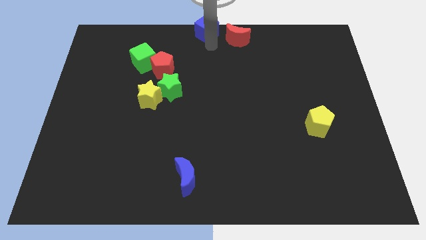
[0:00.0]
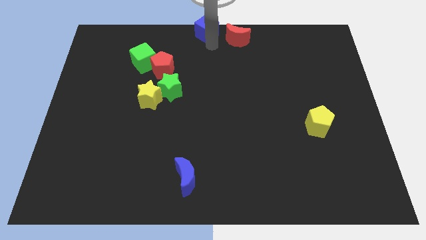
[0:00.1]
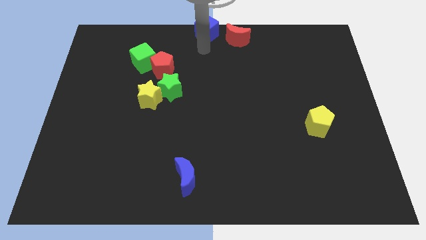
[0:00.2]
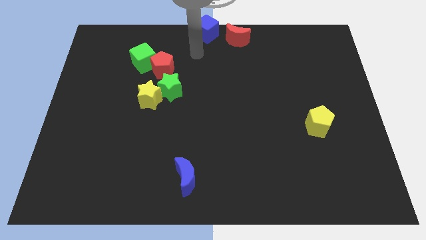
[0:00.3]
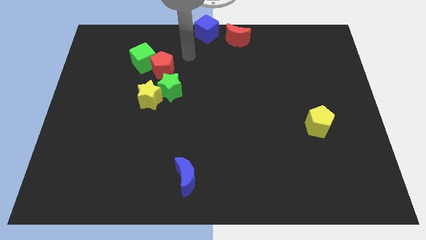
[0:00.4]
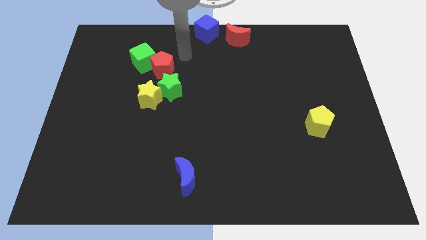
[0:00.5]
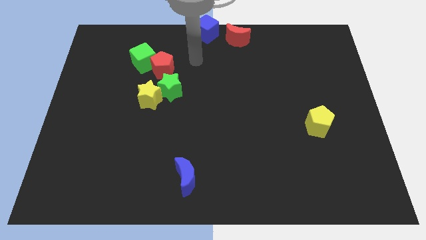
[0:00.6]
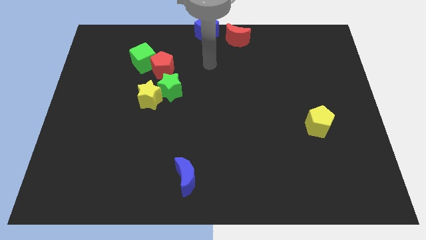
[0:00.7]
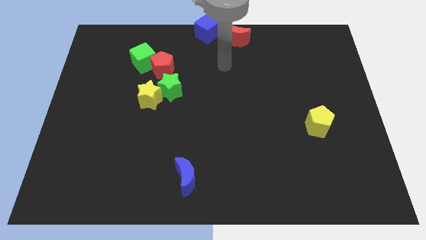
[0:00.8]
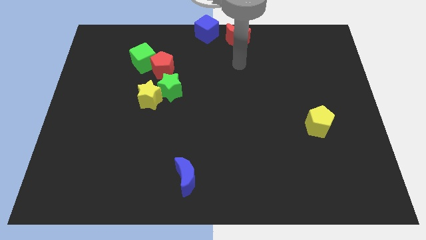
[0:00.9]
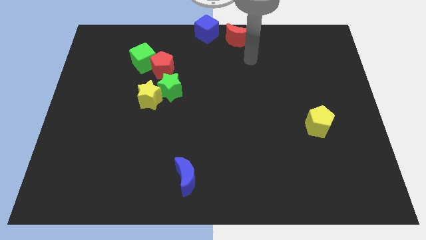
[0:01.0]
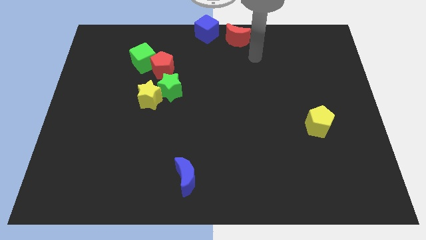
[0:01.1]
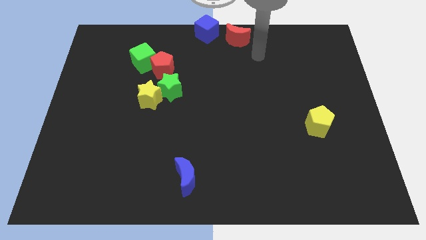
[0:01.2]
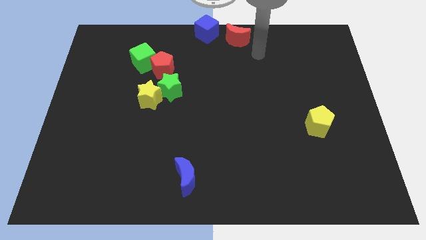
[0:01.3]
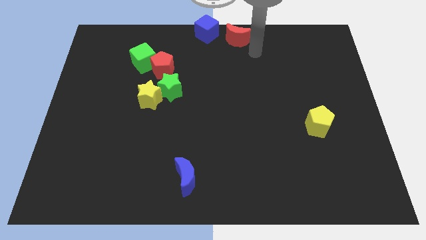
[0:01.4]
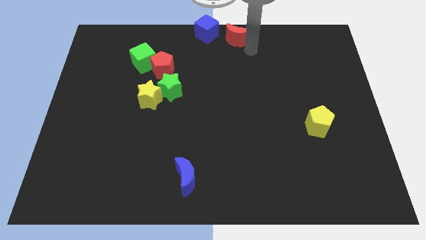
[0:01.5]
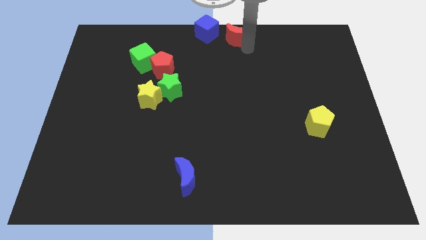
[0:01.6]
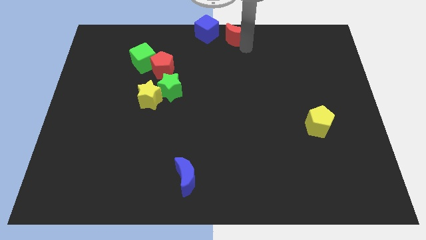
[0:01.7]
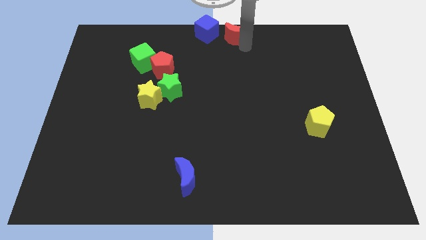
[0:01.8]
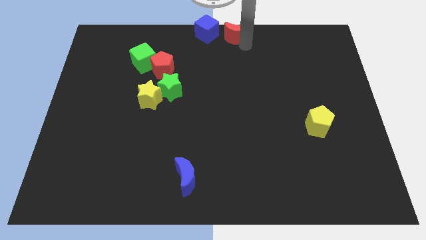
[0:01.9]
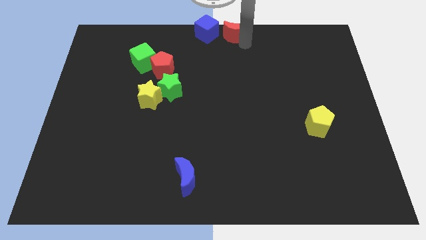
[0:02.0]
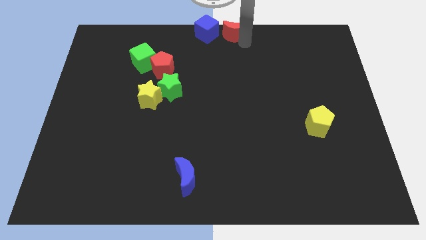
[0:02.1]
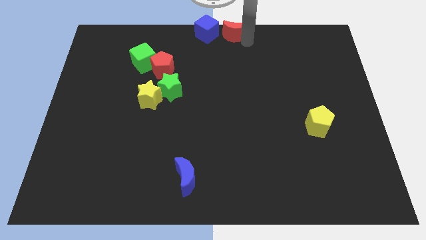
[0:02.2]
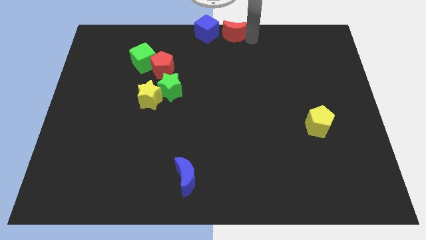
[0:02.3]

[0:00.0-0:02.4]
place the red moon to the right of the blue cube

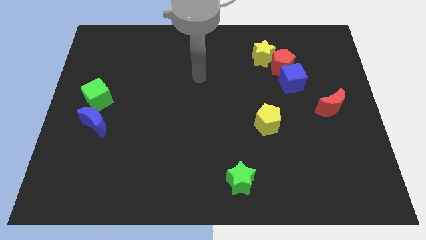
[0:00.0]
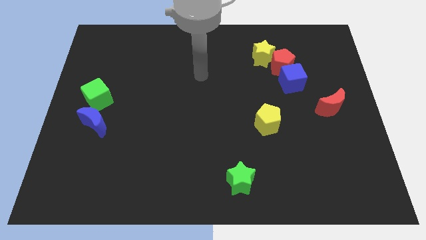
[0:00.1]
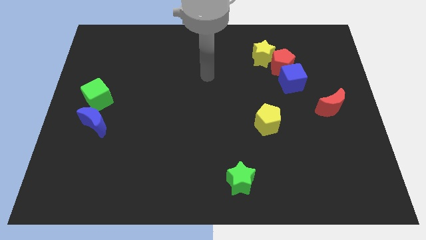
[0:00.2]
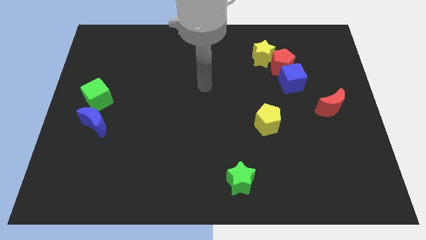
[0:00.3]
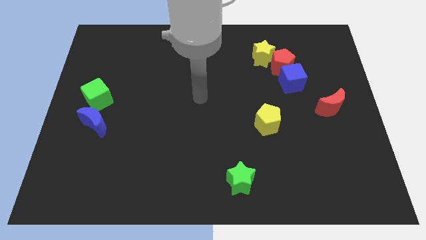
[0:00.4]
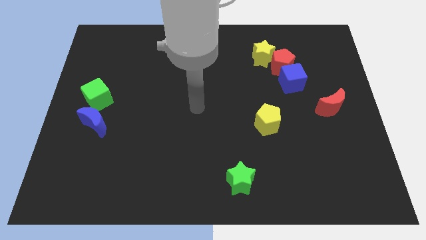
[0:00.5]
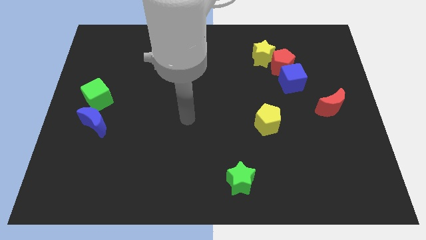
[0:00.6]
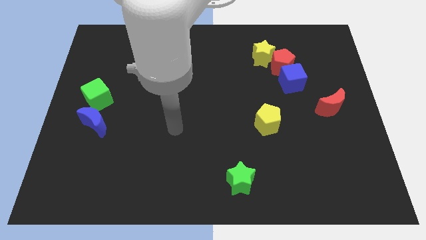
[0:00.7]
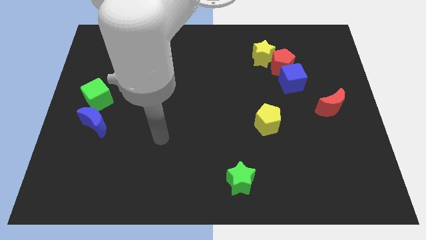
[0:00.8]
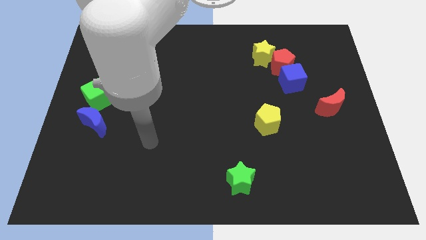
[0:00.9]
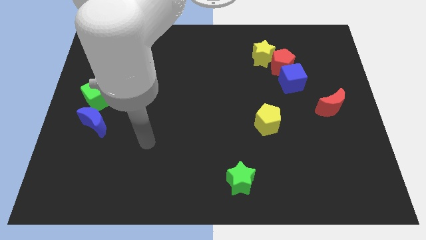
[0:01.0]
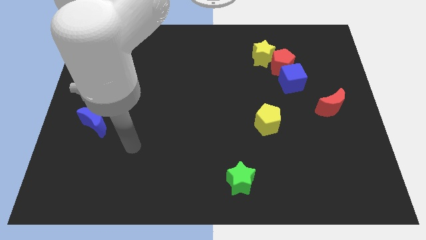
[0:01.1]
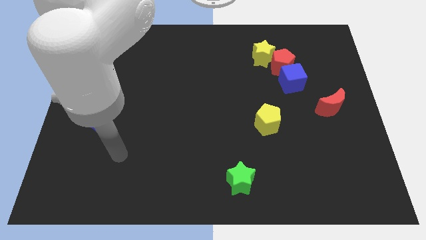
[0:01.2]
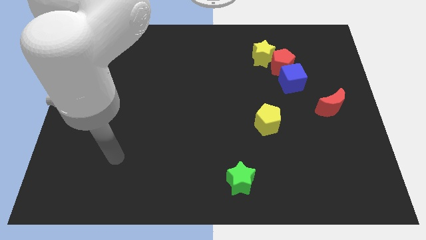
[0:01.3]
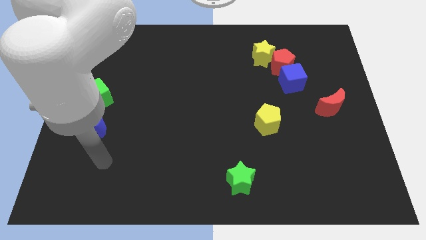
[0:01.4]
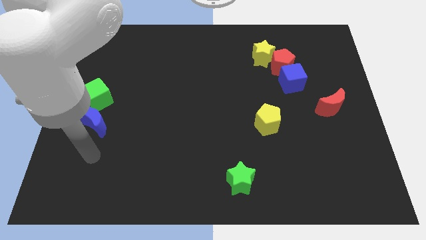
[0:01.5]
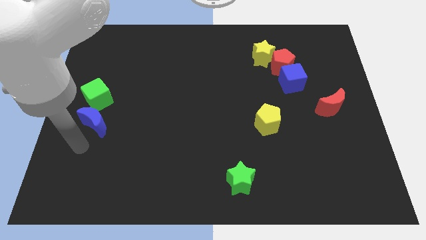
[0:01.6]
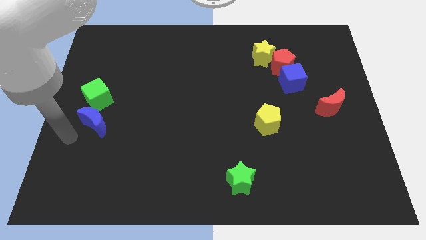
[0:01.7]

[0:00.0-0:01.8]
point your arm at the bottom side of the blue moon

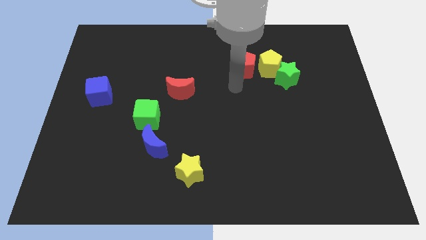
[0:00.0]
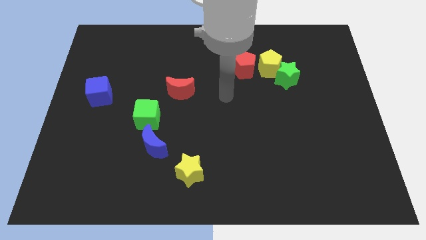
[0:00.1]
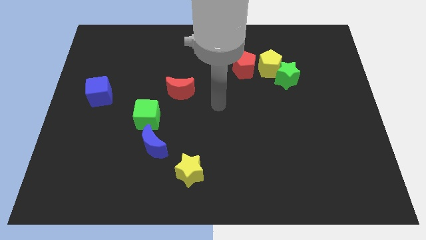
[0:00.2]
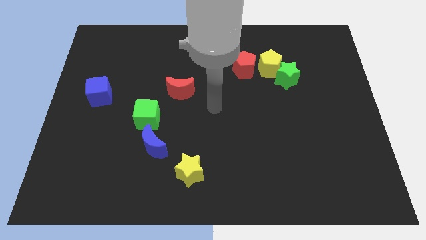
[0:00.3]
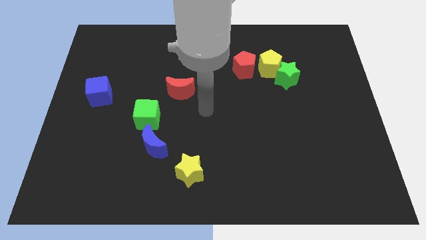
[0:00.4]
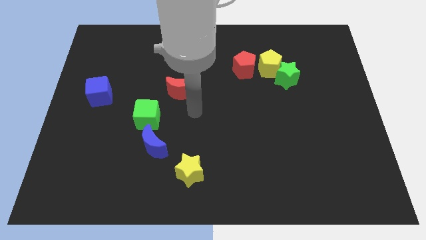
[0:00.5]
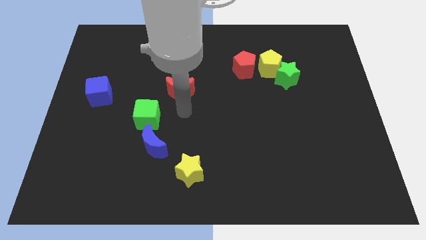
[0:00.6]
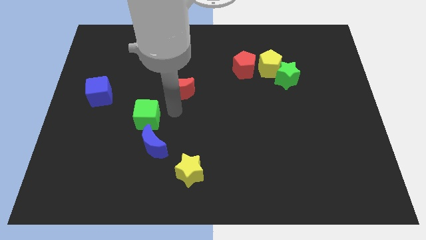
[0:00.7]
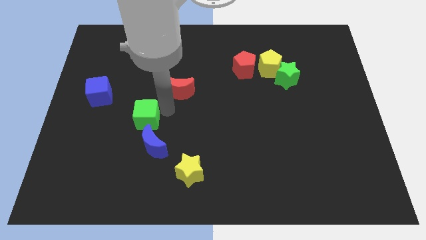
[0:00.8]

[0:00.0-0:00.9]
move your arm to the right of green cube

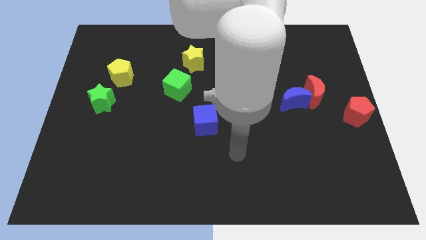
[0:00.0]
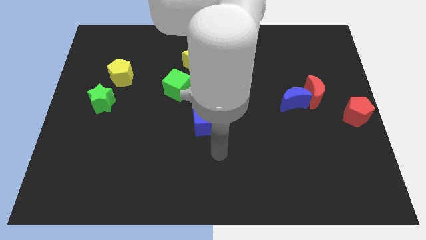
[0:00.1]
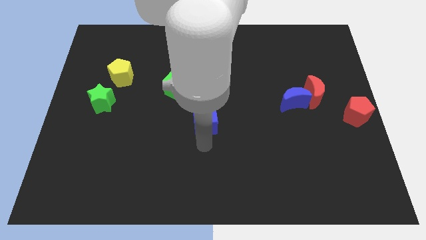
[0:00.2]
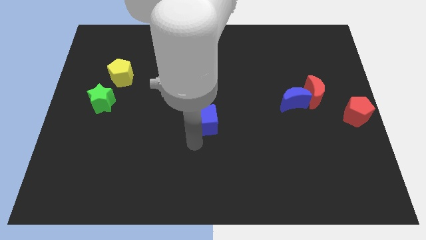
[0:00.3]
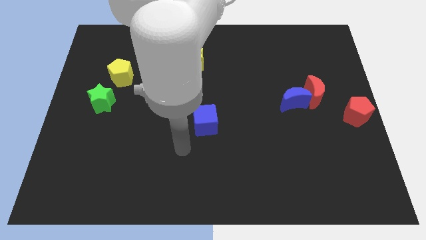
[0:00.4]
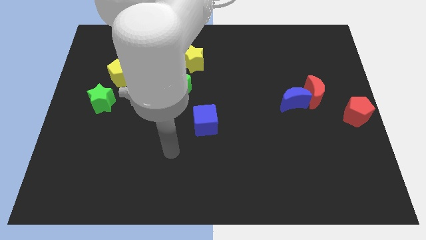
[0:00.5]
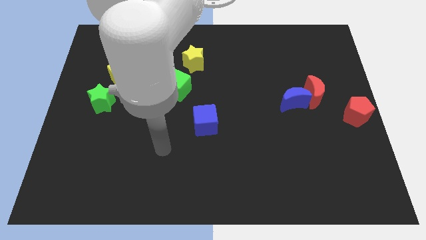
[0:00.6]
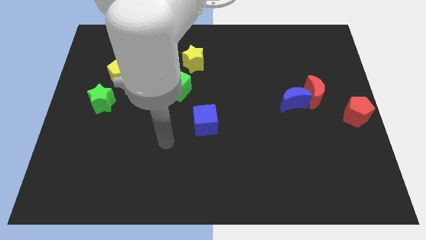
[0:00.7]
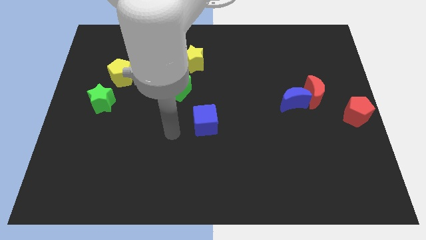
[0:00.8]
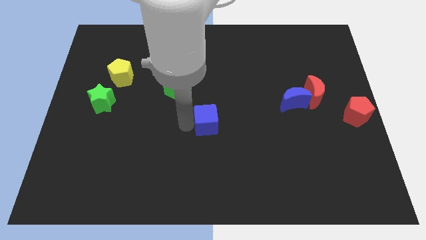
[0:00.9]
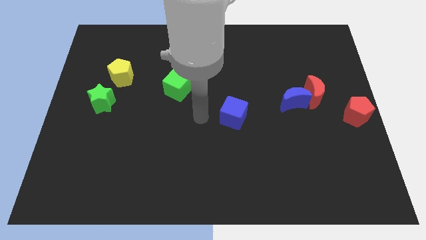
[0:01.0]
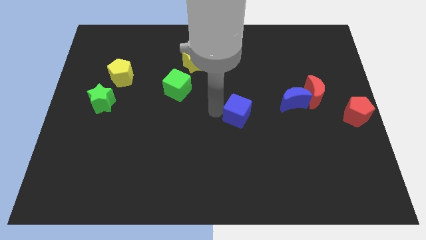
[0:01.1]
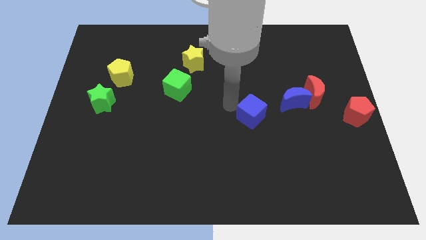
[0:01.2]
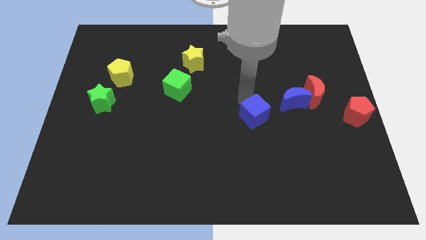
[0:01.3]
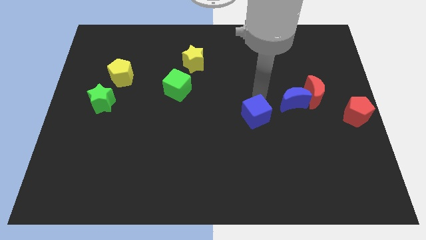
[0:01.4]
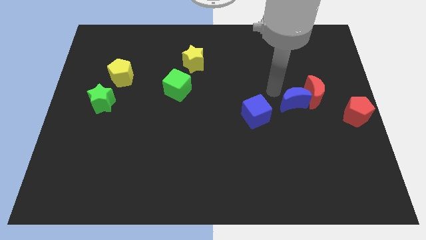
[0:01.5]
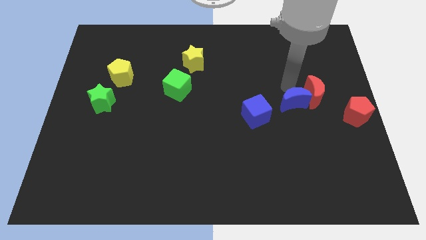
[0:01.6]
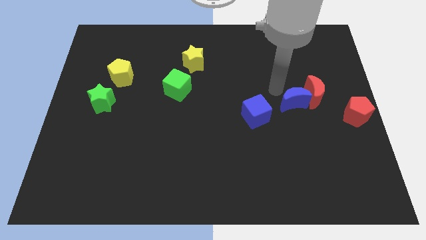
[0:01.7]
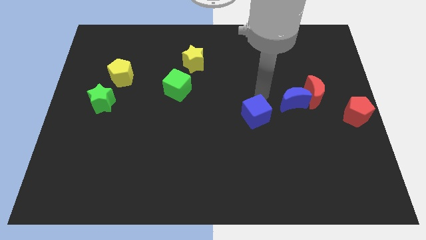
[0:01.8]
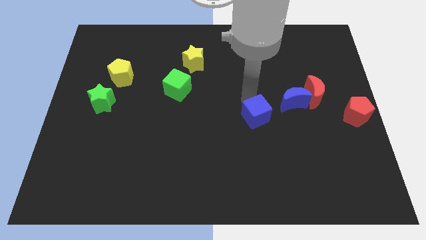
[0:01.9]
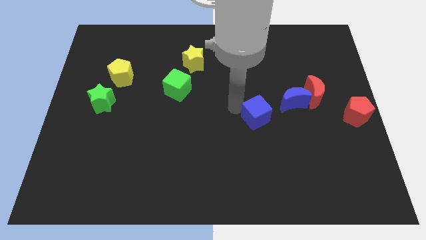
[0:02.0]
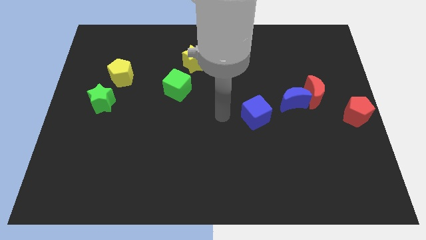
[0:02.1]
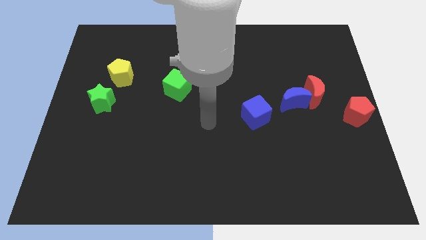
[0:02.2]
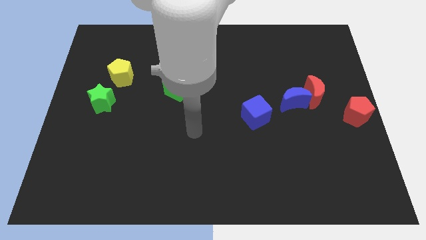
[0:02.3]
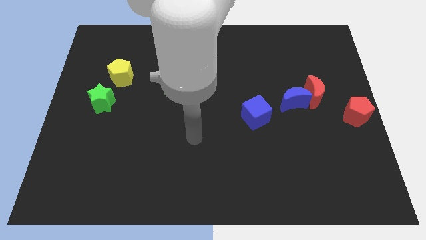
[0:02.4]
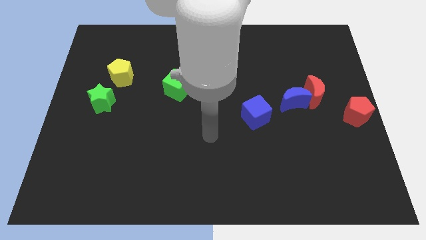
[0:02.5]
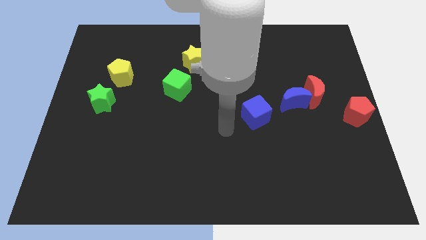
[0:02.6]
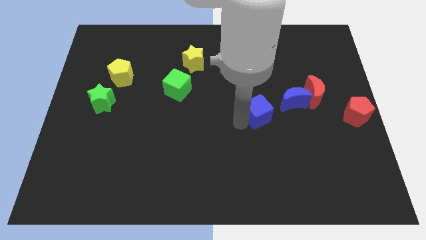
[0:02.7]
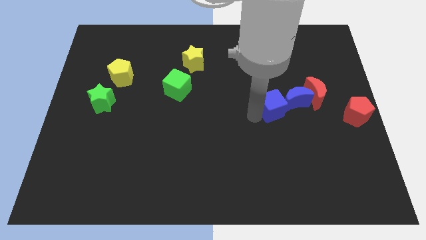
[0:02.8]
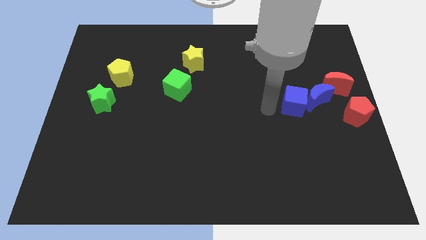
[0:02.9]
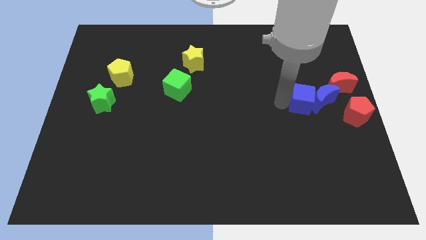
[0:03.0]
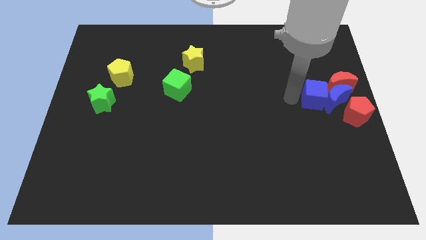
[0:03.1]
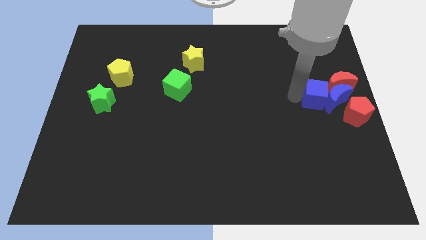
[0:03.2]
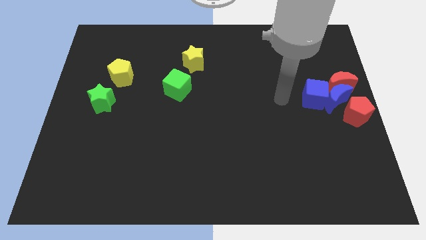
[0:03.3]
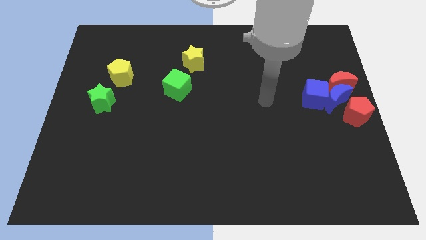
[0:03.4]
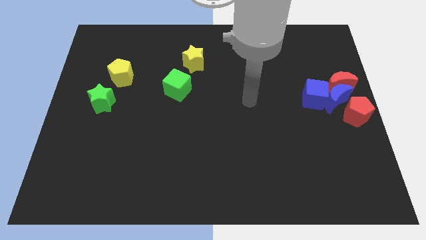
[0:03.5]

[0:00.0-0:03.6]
push the blue cube into the blue moon

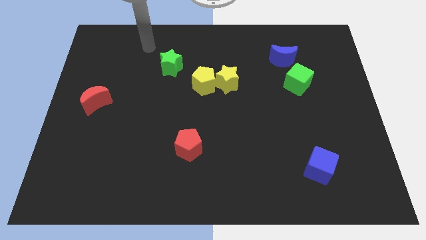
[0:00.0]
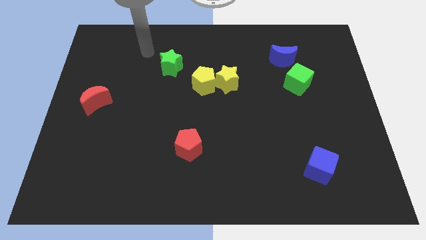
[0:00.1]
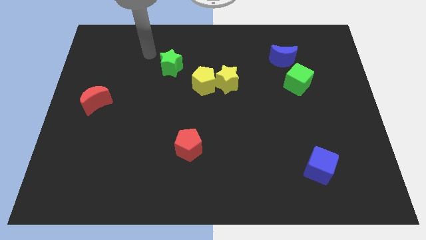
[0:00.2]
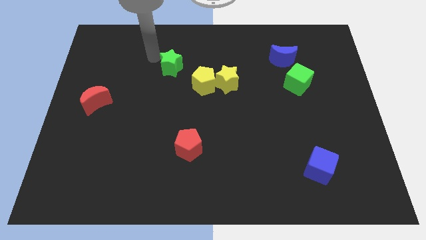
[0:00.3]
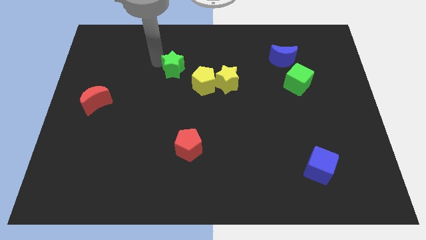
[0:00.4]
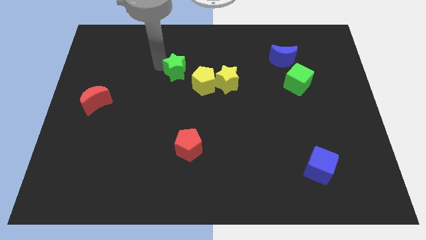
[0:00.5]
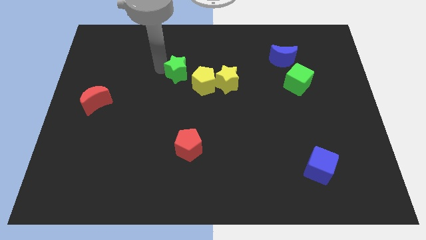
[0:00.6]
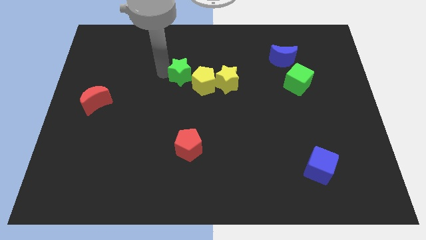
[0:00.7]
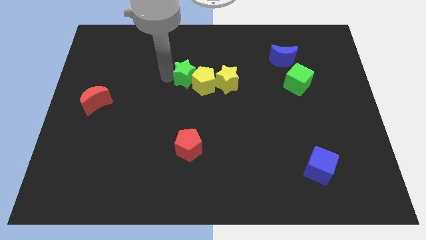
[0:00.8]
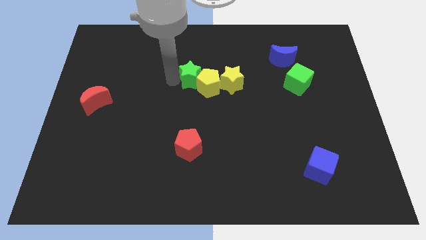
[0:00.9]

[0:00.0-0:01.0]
push the green star towards yellow pentagon
